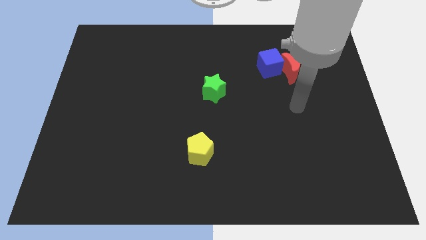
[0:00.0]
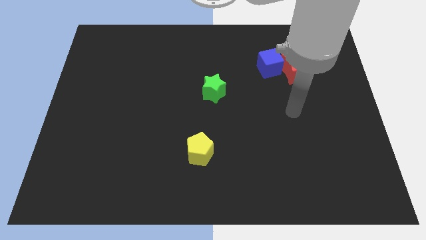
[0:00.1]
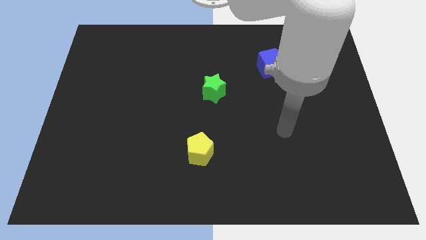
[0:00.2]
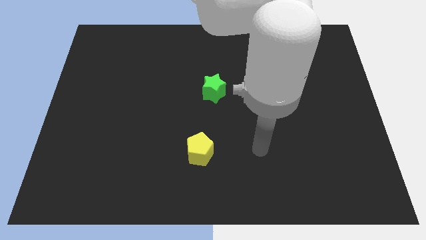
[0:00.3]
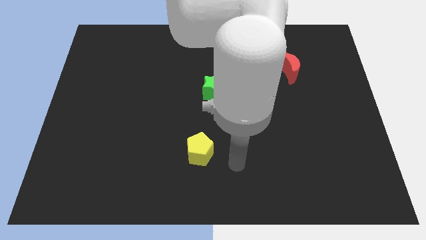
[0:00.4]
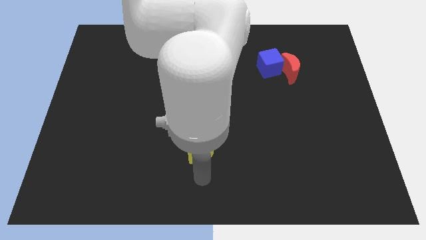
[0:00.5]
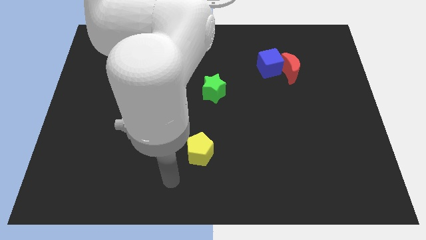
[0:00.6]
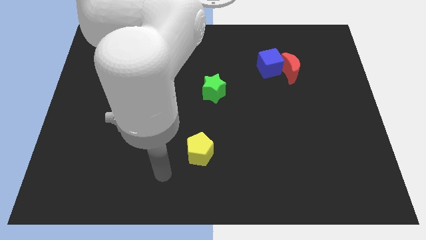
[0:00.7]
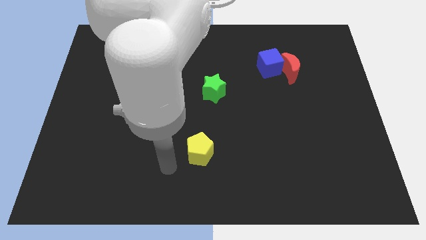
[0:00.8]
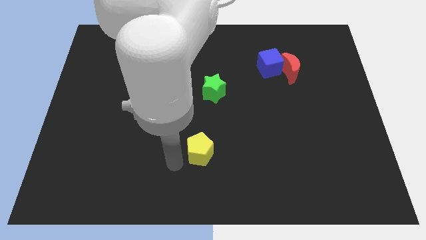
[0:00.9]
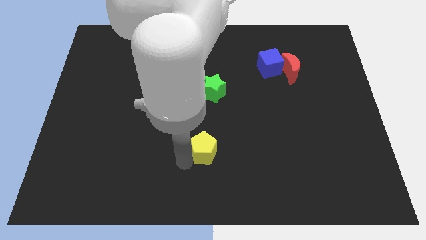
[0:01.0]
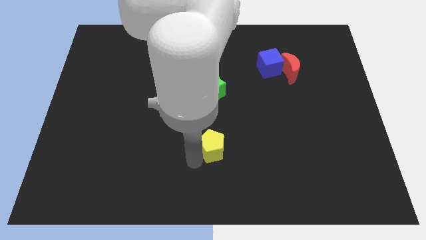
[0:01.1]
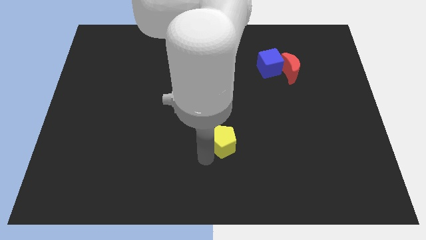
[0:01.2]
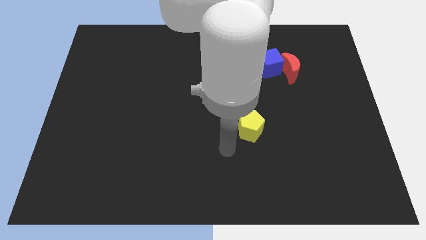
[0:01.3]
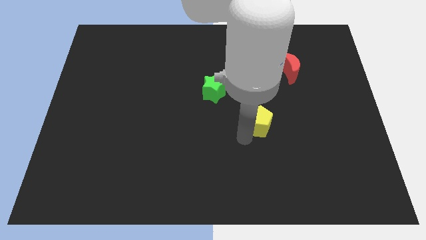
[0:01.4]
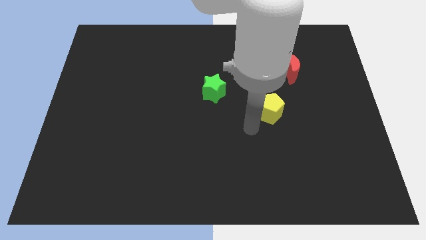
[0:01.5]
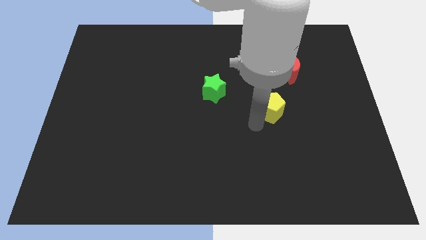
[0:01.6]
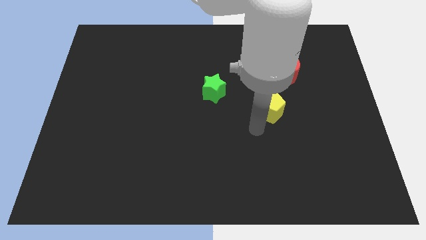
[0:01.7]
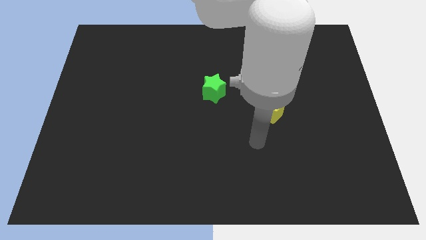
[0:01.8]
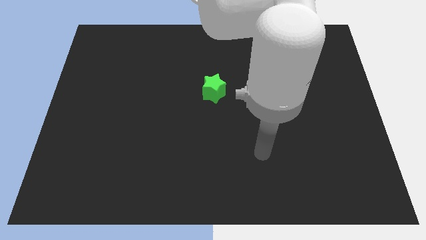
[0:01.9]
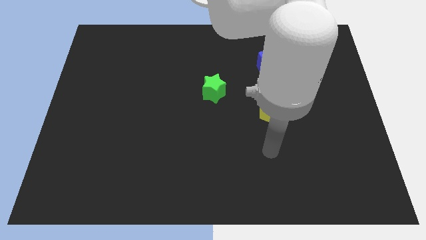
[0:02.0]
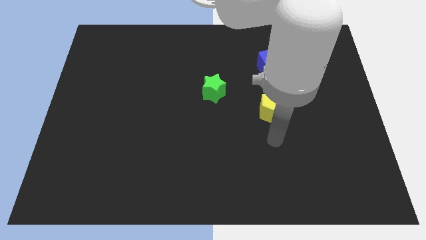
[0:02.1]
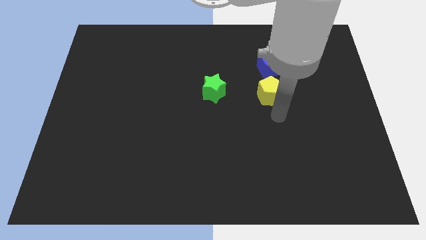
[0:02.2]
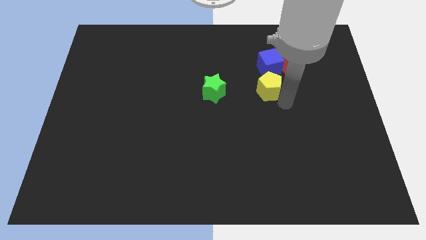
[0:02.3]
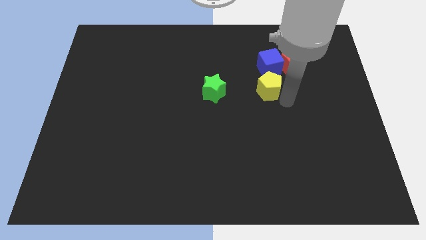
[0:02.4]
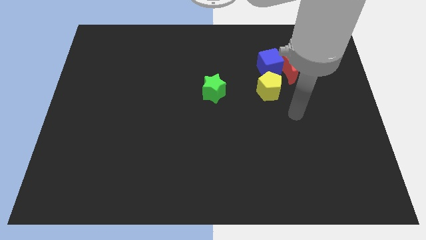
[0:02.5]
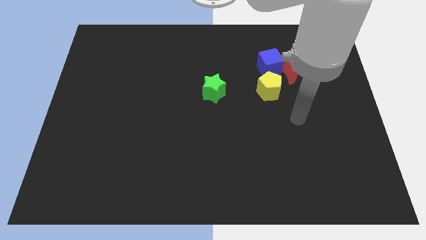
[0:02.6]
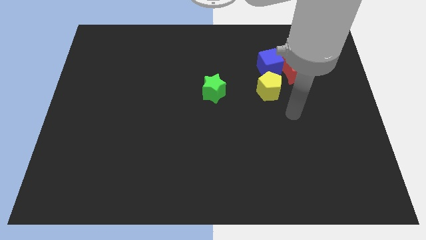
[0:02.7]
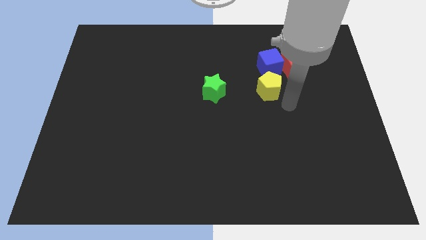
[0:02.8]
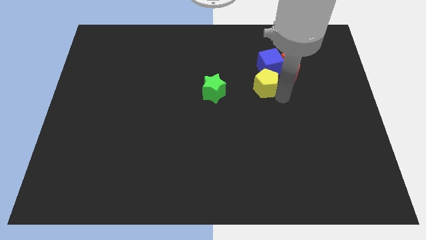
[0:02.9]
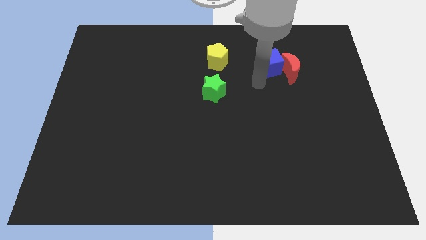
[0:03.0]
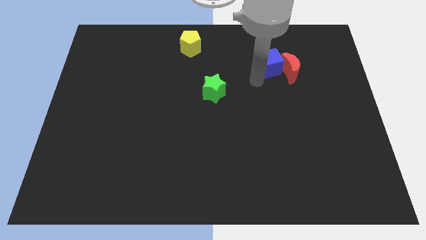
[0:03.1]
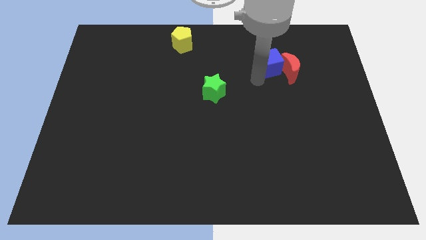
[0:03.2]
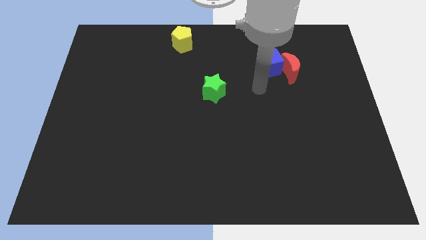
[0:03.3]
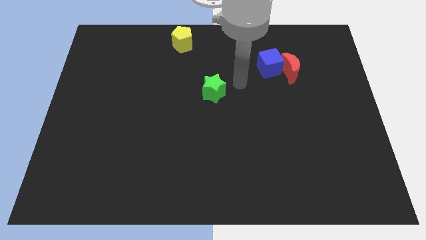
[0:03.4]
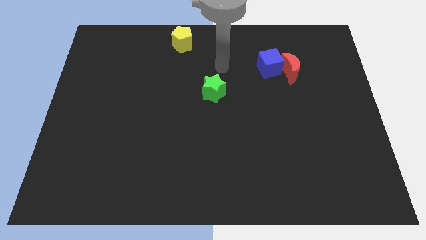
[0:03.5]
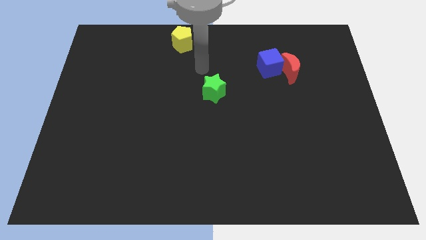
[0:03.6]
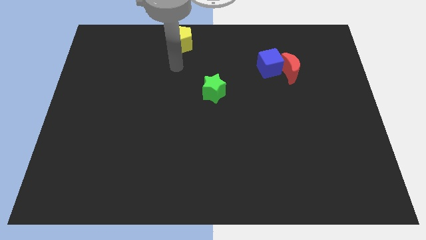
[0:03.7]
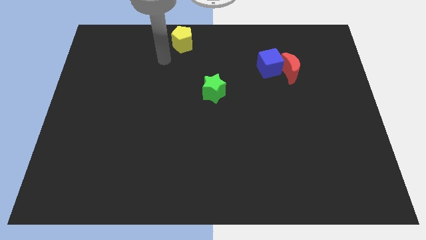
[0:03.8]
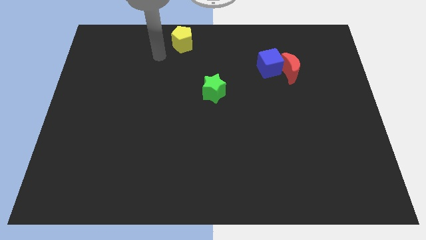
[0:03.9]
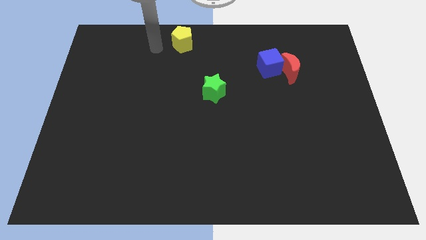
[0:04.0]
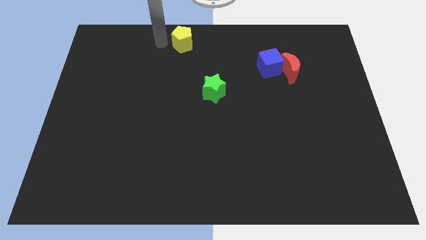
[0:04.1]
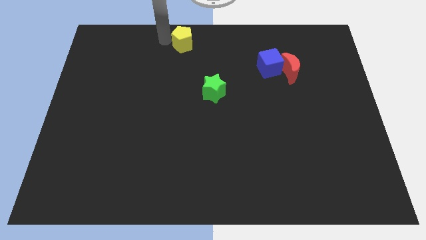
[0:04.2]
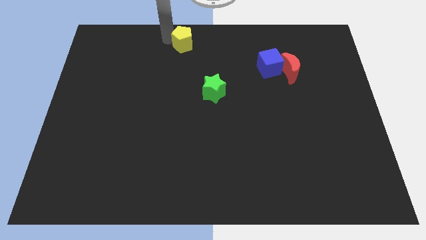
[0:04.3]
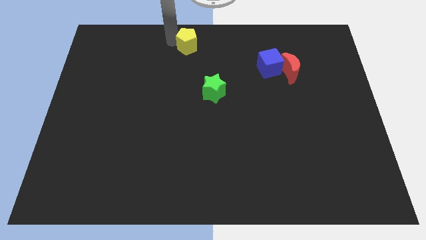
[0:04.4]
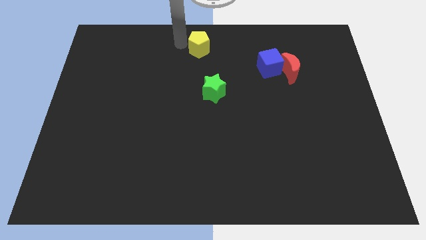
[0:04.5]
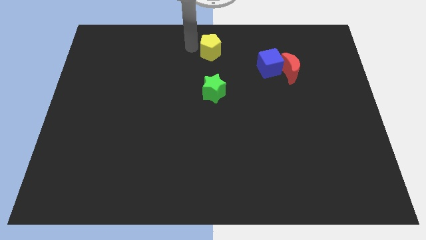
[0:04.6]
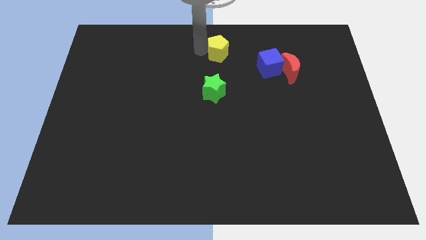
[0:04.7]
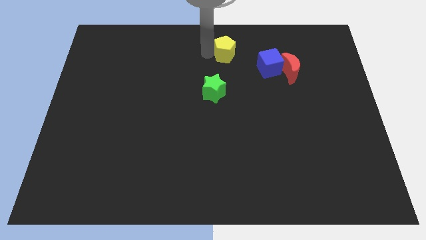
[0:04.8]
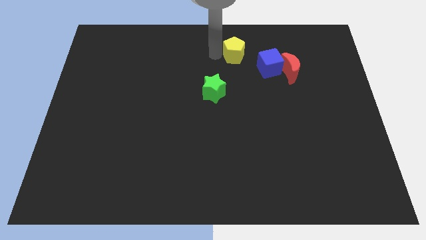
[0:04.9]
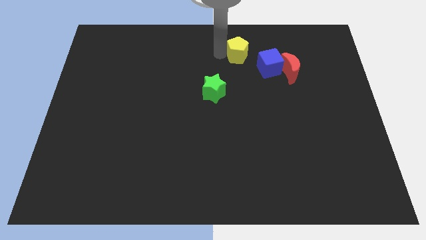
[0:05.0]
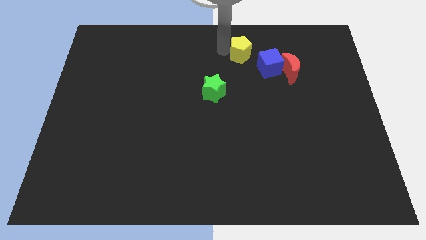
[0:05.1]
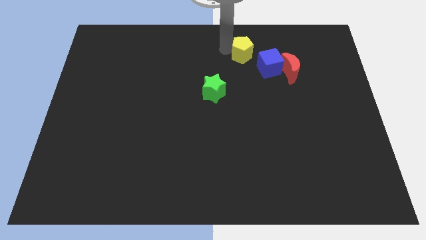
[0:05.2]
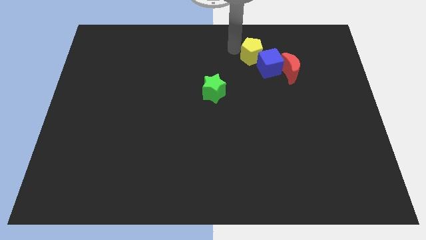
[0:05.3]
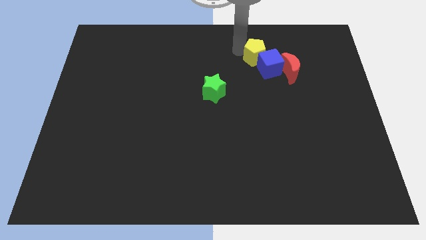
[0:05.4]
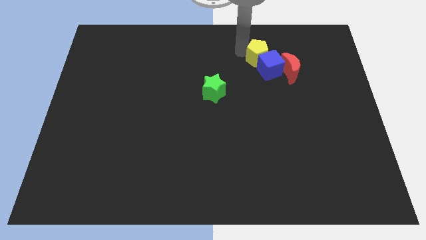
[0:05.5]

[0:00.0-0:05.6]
push the pentagon towards the blue cube

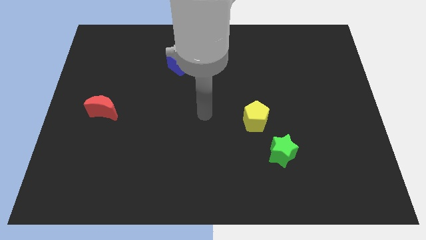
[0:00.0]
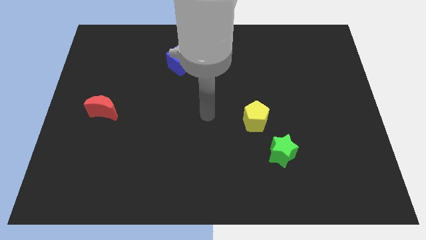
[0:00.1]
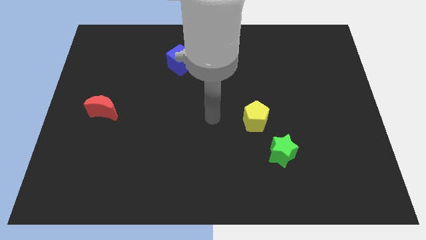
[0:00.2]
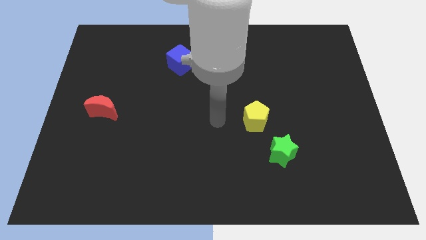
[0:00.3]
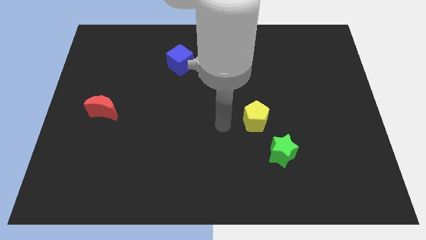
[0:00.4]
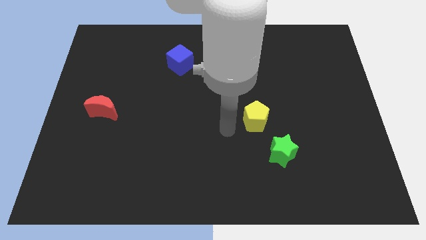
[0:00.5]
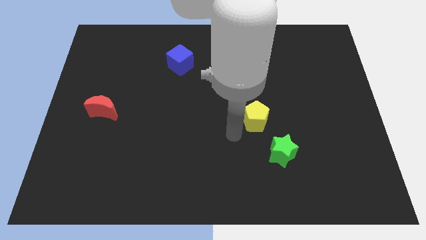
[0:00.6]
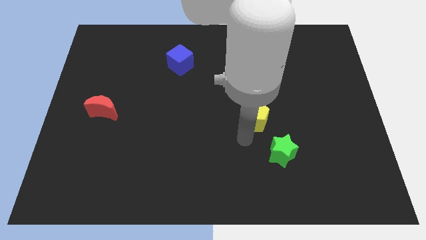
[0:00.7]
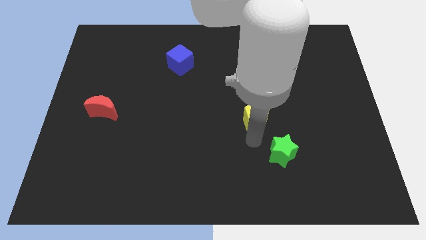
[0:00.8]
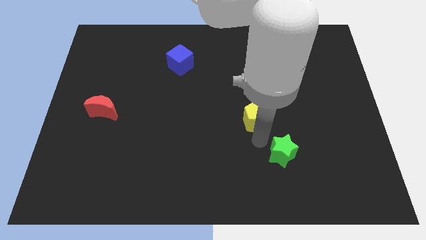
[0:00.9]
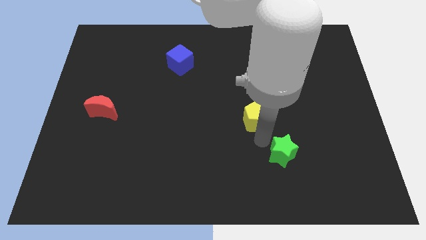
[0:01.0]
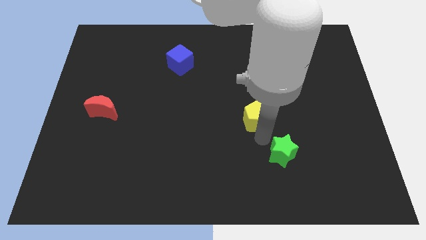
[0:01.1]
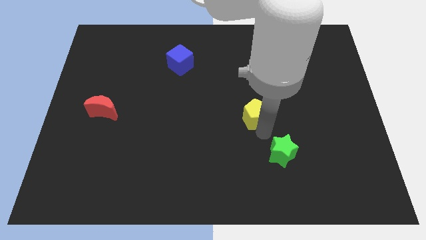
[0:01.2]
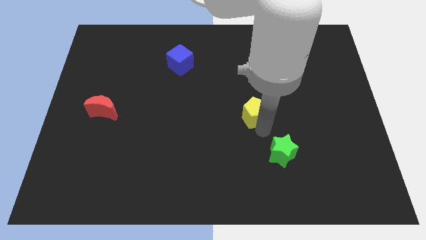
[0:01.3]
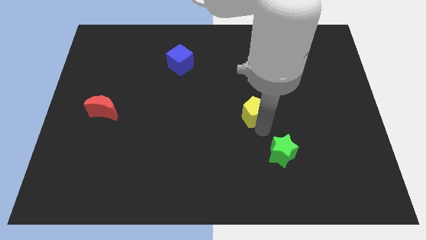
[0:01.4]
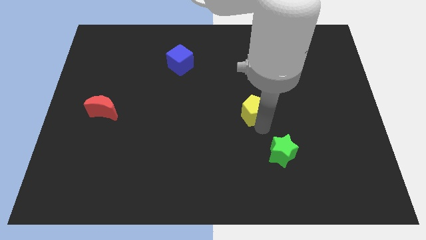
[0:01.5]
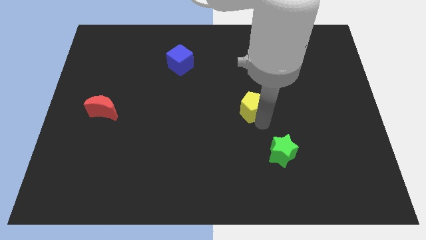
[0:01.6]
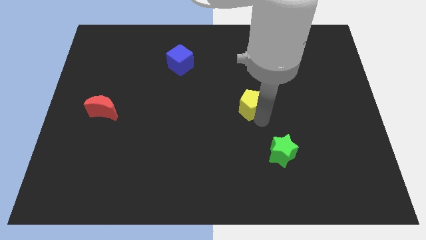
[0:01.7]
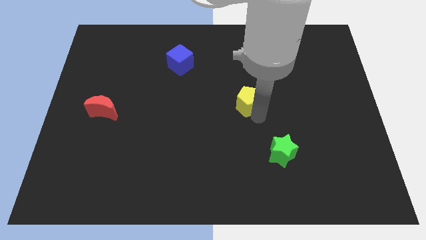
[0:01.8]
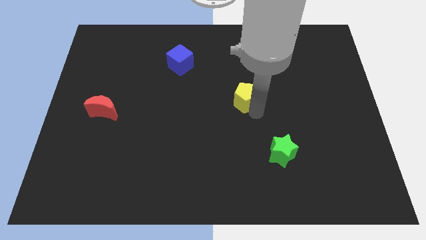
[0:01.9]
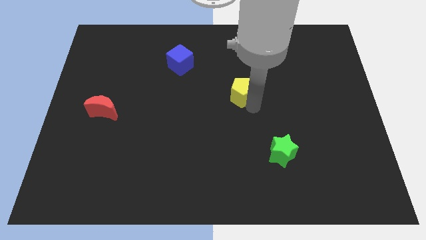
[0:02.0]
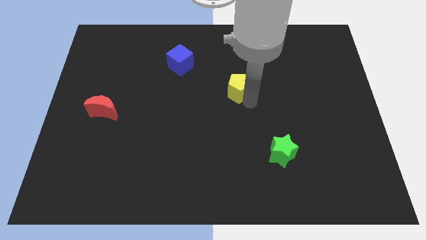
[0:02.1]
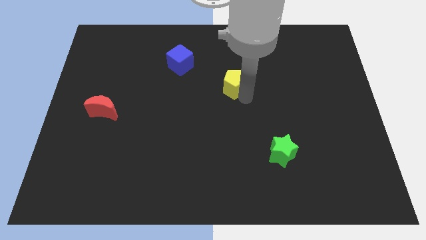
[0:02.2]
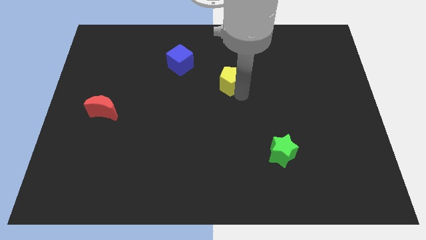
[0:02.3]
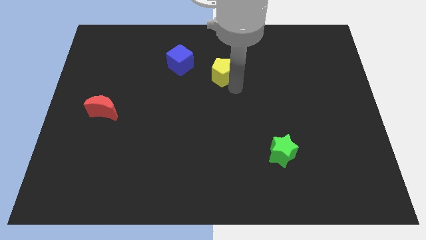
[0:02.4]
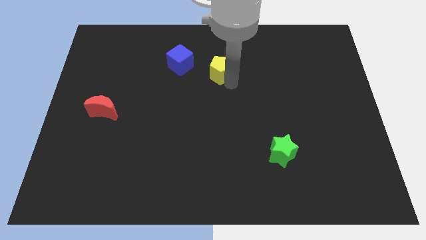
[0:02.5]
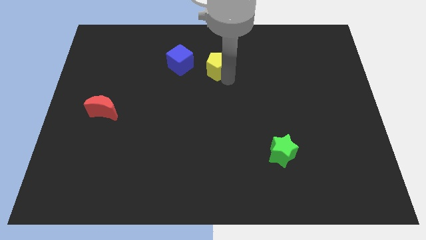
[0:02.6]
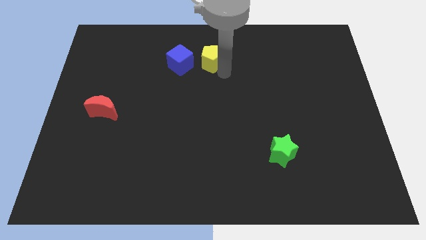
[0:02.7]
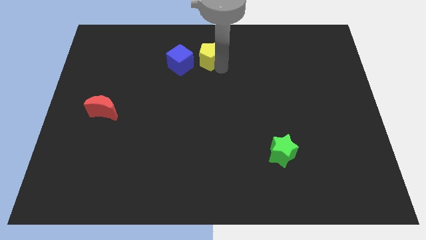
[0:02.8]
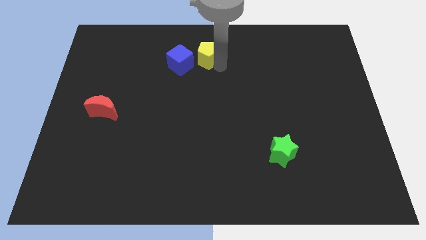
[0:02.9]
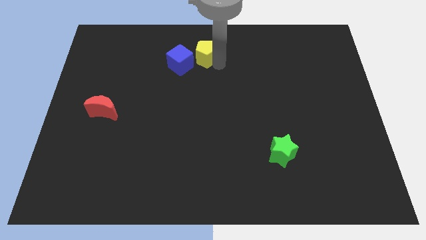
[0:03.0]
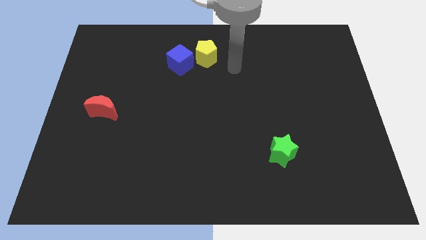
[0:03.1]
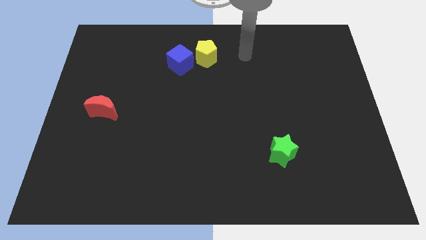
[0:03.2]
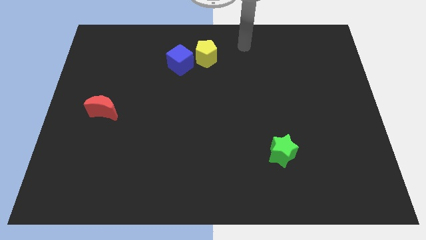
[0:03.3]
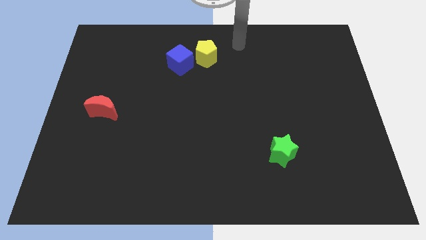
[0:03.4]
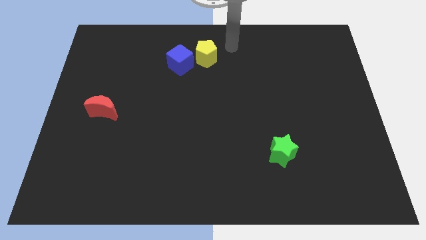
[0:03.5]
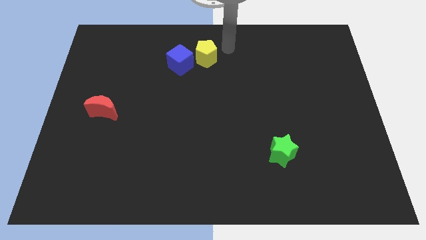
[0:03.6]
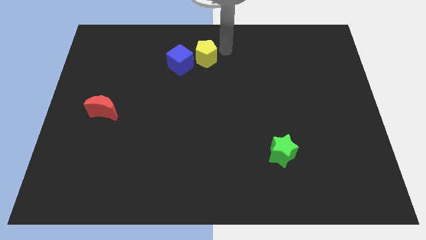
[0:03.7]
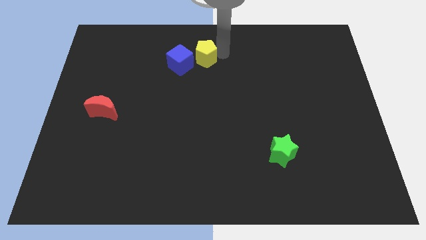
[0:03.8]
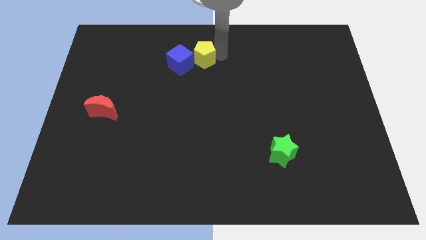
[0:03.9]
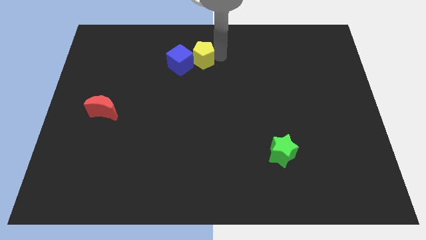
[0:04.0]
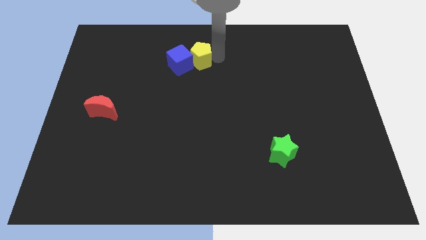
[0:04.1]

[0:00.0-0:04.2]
move the yellow block close to the cube
